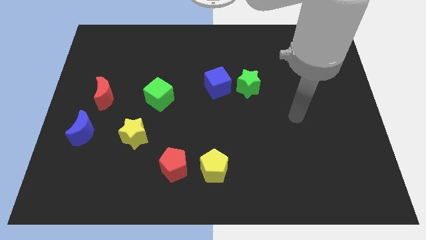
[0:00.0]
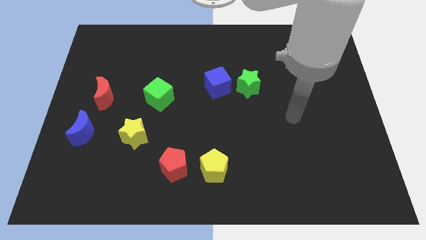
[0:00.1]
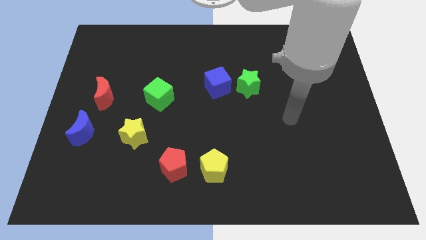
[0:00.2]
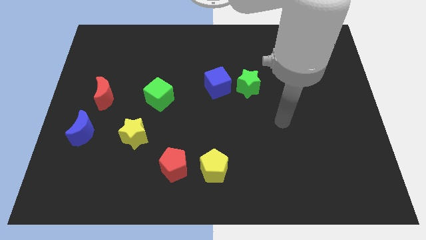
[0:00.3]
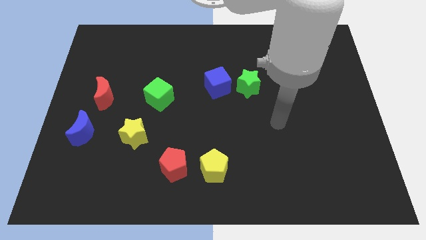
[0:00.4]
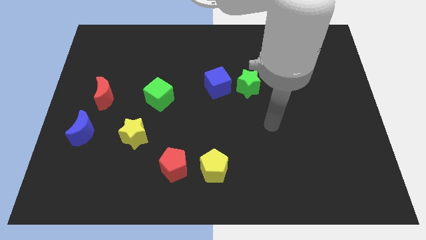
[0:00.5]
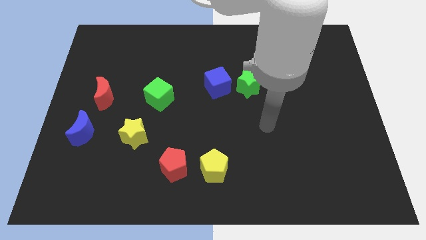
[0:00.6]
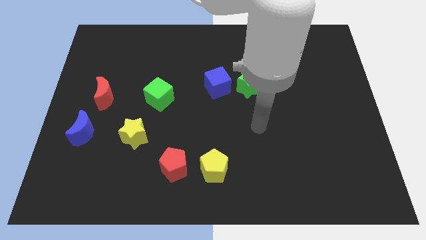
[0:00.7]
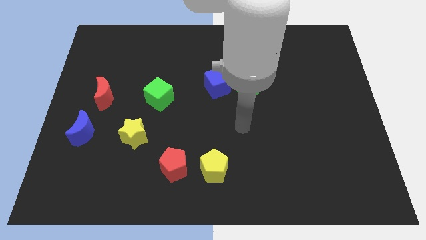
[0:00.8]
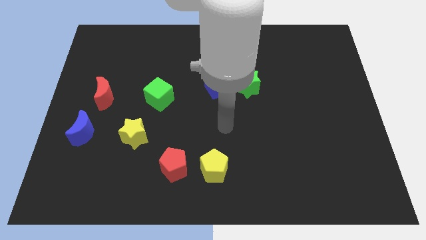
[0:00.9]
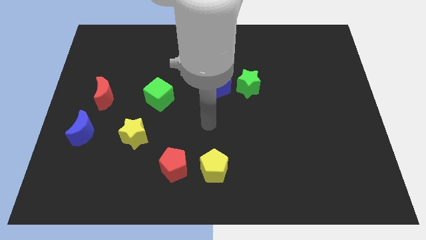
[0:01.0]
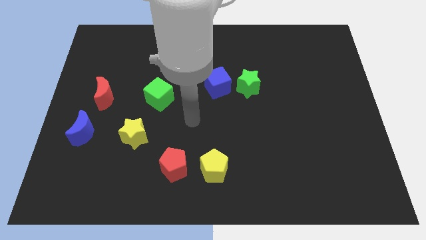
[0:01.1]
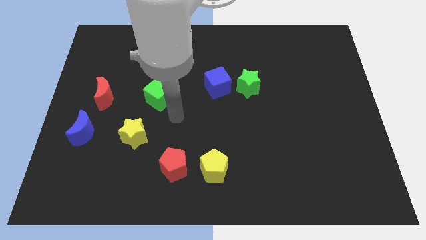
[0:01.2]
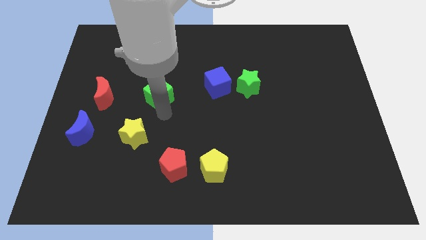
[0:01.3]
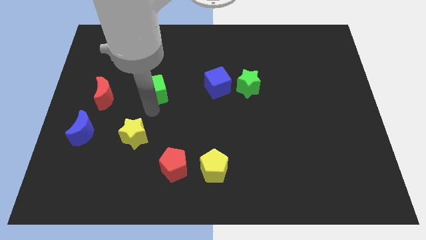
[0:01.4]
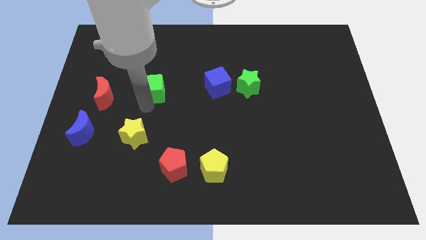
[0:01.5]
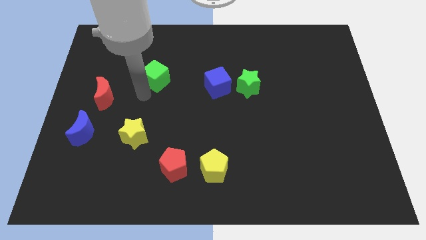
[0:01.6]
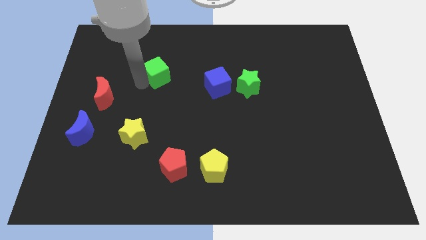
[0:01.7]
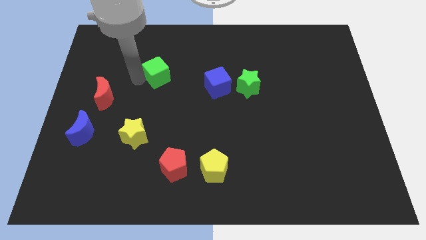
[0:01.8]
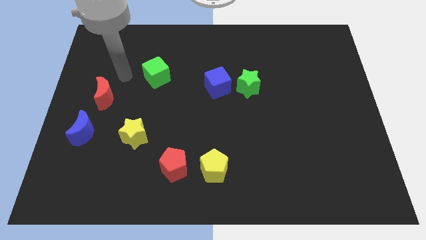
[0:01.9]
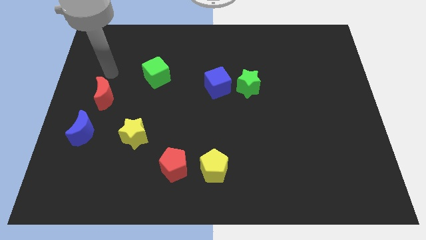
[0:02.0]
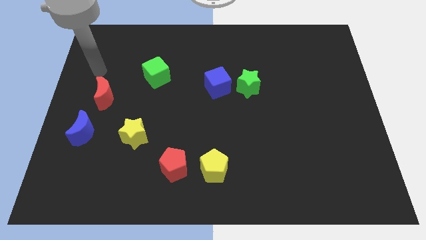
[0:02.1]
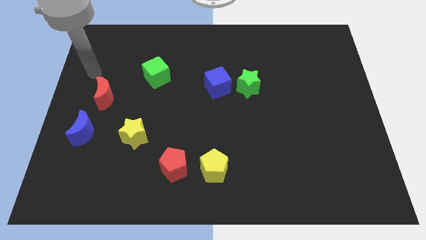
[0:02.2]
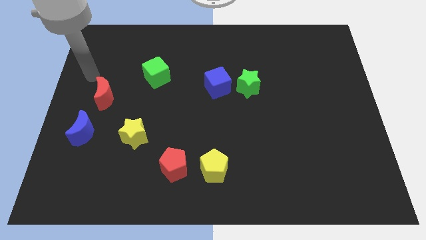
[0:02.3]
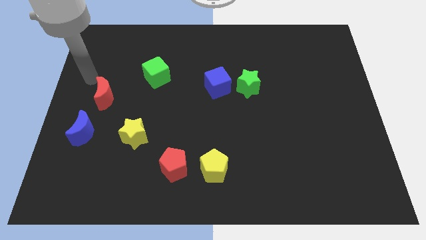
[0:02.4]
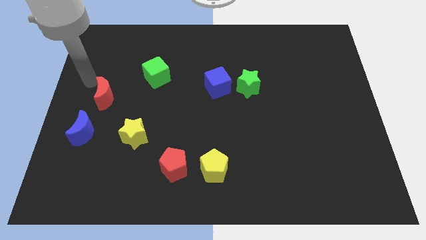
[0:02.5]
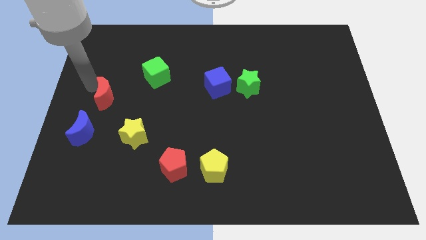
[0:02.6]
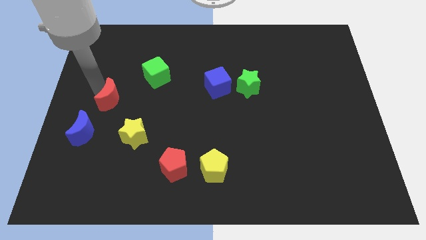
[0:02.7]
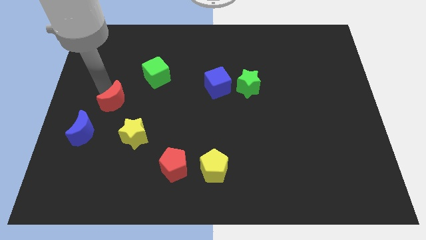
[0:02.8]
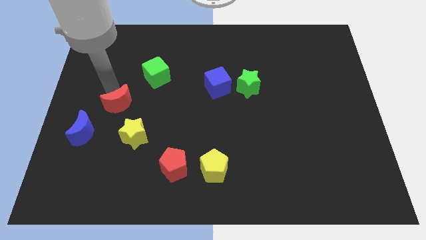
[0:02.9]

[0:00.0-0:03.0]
slightly move the green cube towards the top center of the board

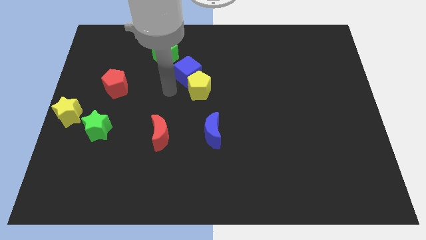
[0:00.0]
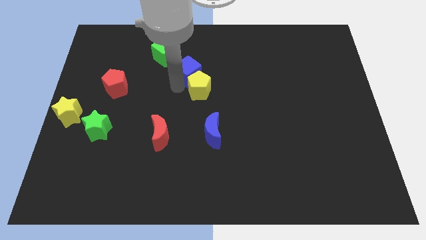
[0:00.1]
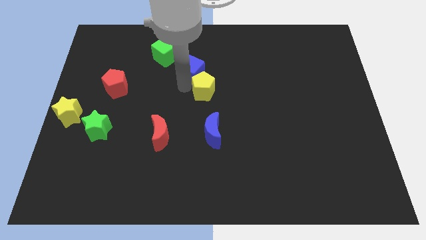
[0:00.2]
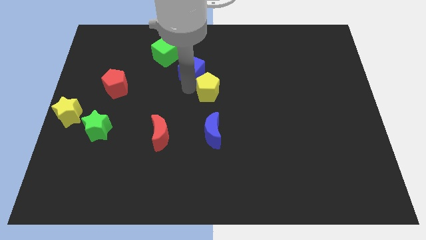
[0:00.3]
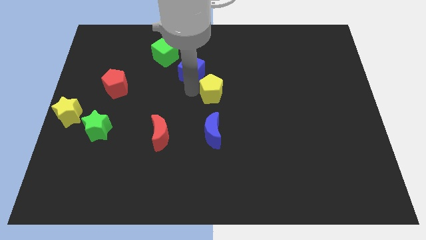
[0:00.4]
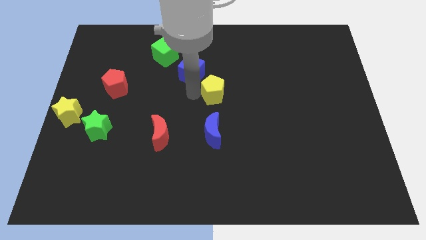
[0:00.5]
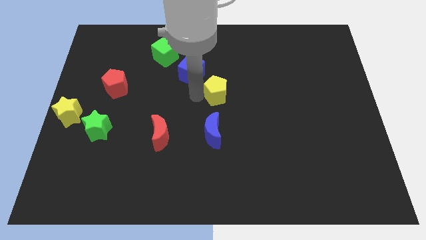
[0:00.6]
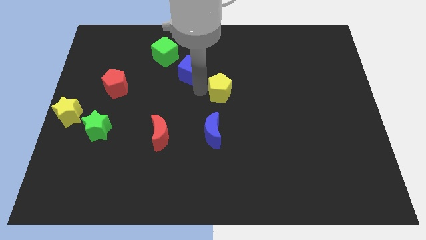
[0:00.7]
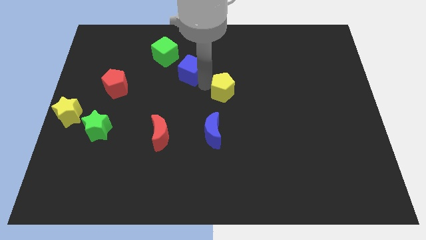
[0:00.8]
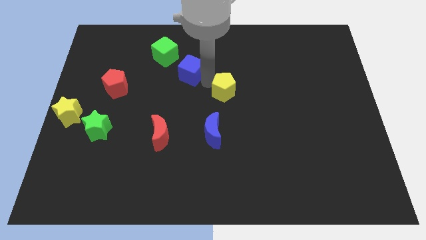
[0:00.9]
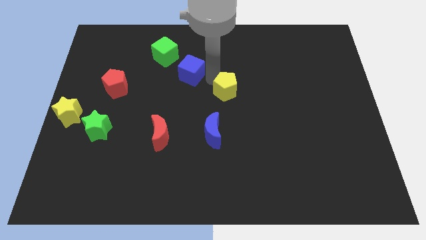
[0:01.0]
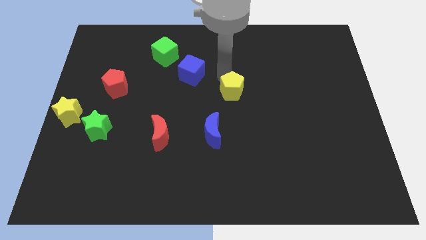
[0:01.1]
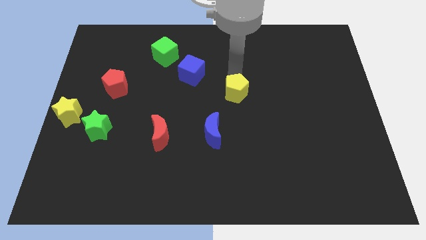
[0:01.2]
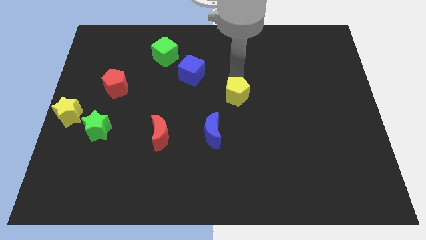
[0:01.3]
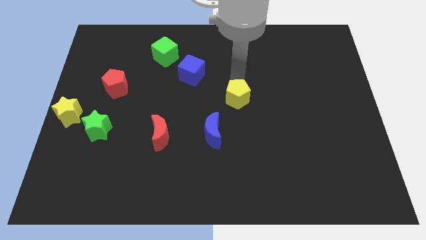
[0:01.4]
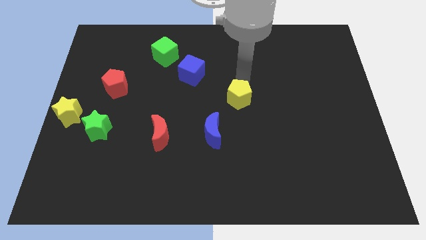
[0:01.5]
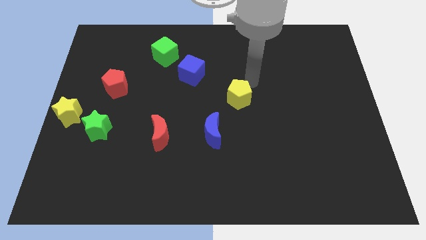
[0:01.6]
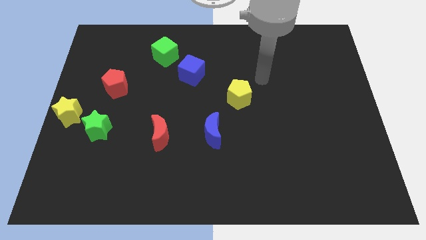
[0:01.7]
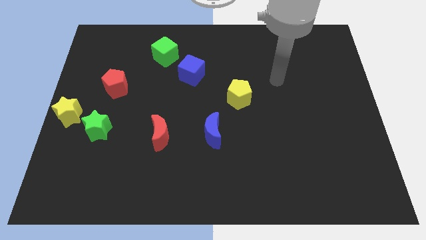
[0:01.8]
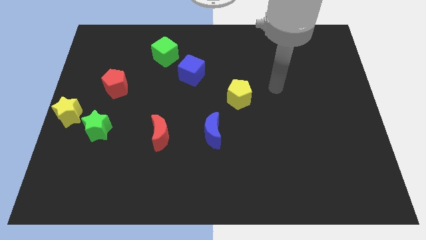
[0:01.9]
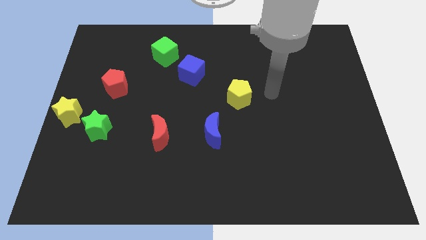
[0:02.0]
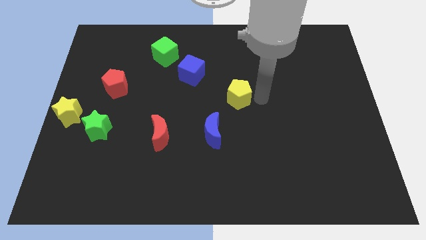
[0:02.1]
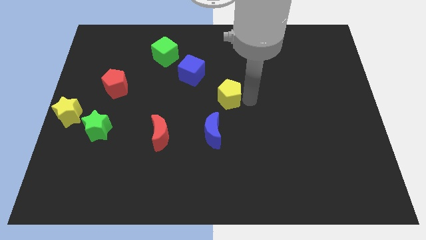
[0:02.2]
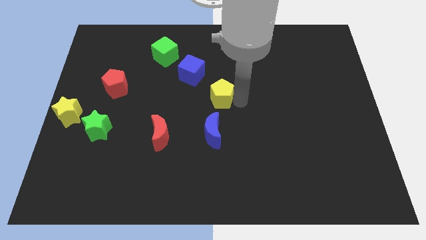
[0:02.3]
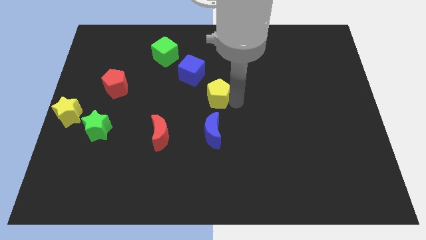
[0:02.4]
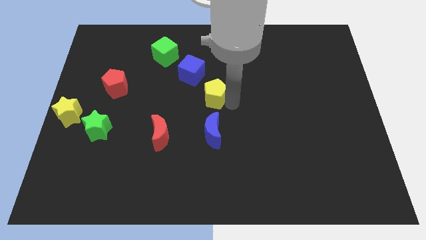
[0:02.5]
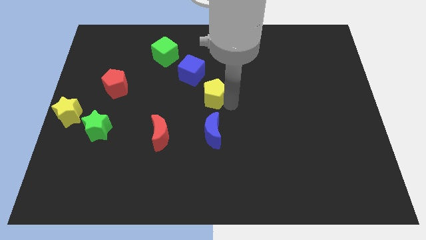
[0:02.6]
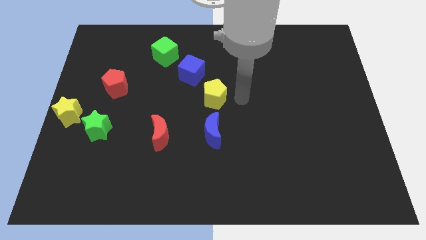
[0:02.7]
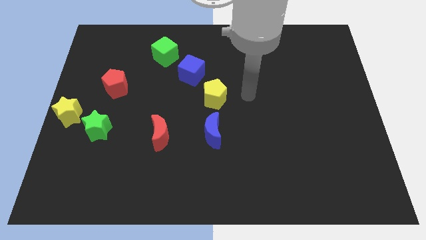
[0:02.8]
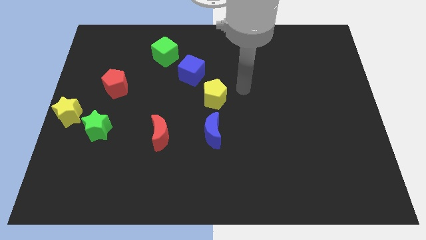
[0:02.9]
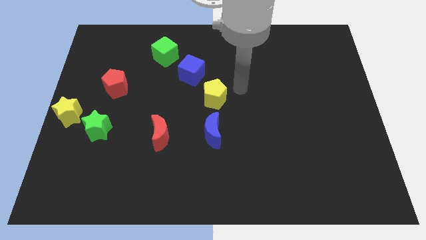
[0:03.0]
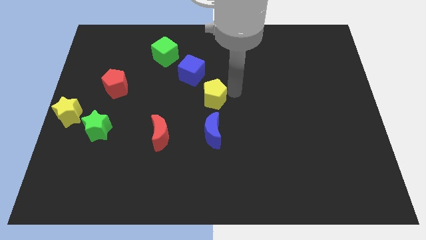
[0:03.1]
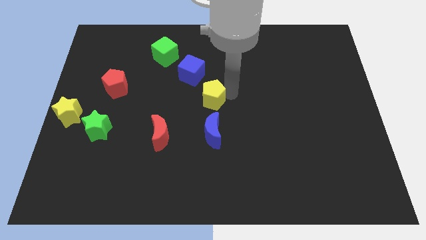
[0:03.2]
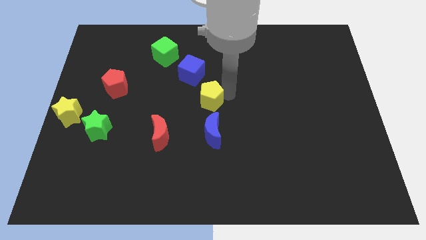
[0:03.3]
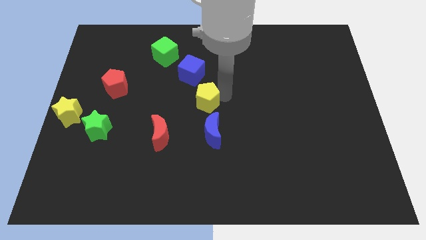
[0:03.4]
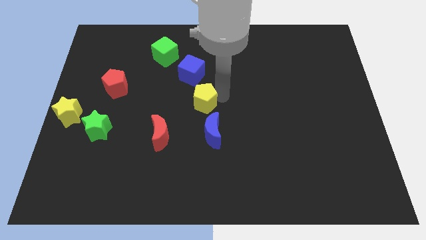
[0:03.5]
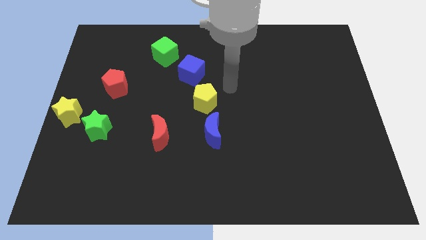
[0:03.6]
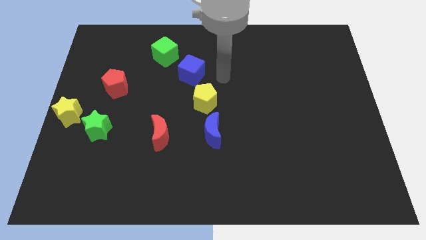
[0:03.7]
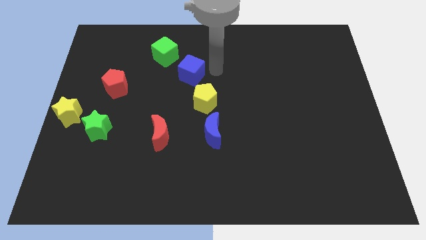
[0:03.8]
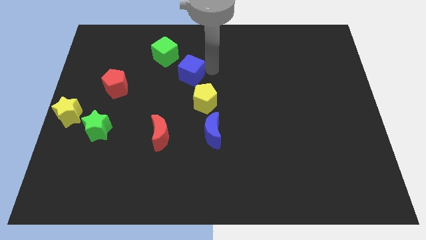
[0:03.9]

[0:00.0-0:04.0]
adjust the yellow pentagon between the blue moon and blue cube

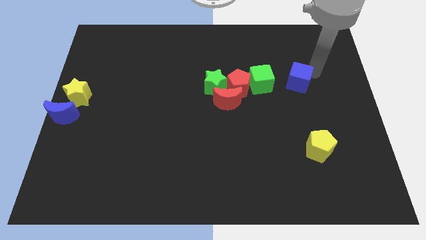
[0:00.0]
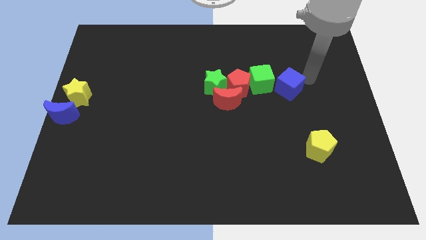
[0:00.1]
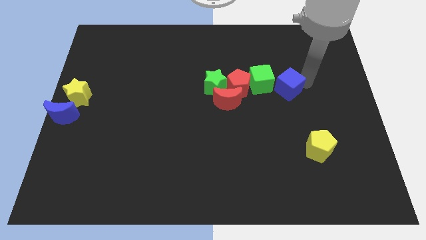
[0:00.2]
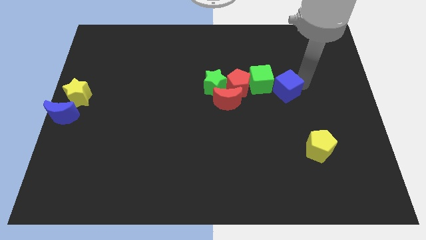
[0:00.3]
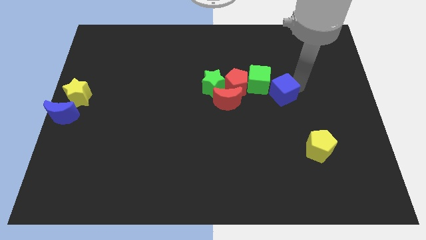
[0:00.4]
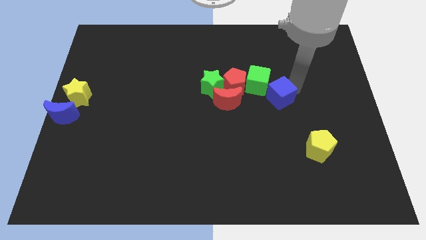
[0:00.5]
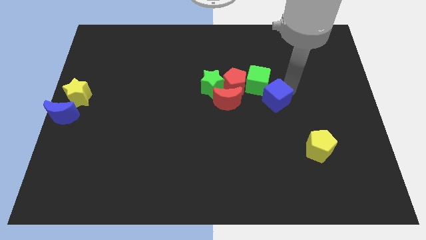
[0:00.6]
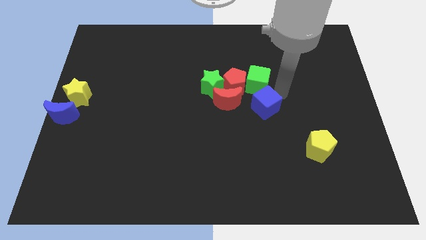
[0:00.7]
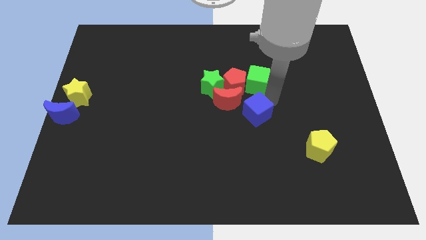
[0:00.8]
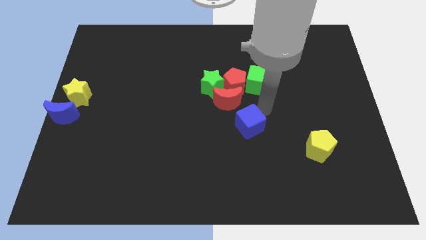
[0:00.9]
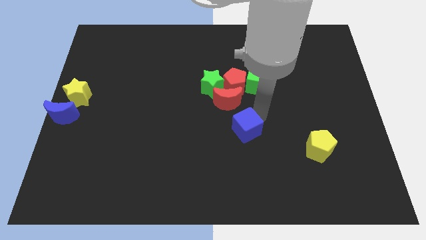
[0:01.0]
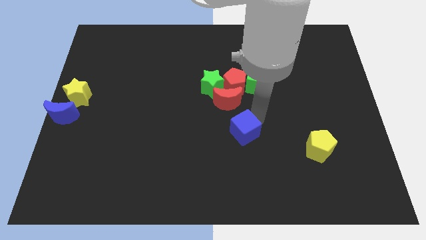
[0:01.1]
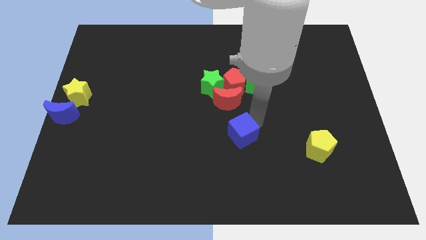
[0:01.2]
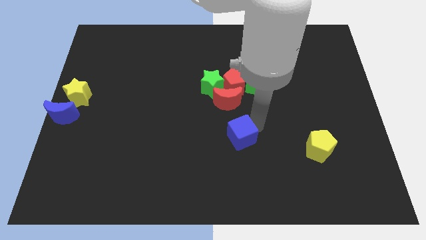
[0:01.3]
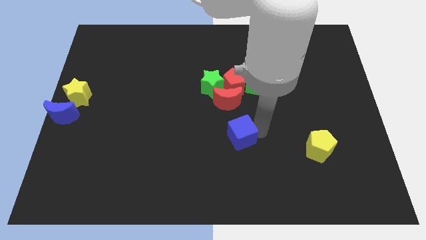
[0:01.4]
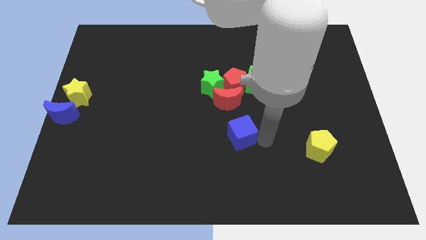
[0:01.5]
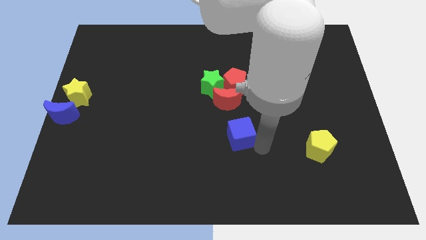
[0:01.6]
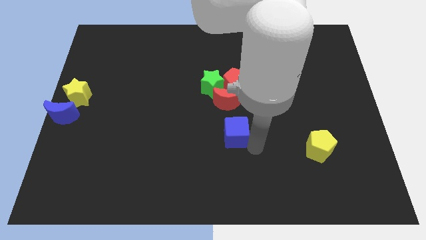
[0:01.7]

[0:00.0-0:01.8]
place the blue cube below the red moon

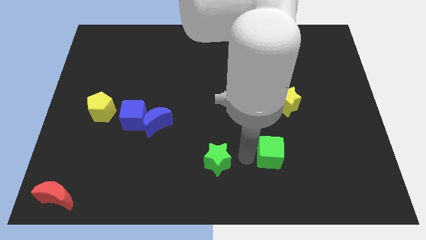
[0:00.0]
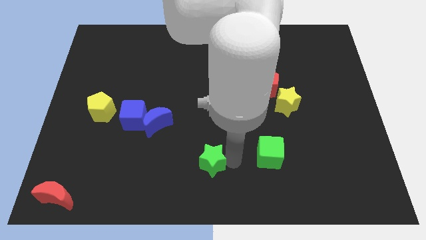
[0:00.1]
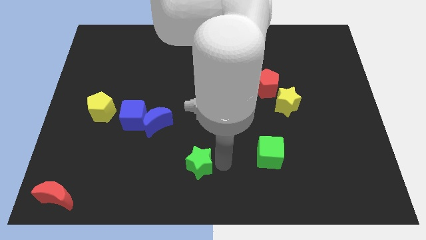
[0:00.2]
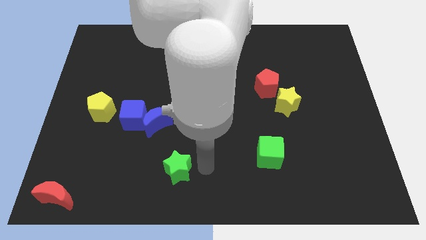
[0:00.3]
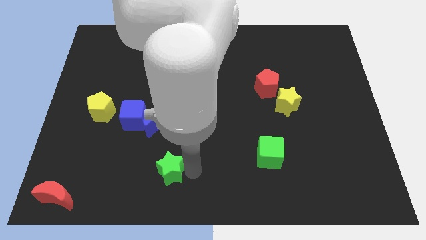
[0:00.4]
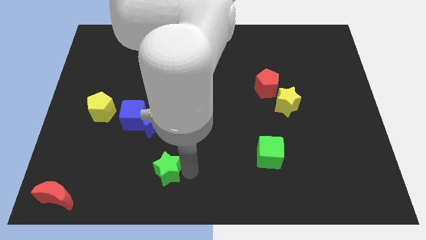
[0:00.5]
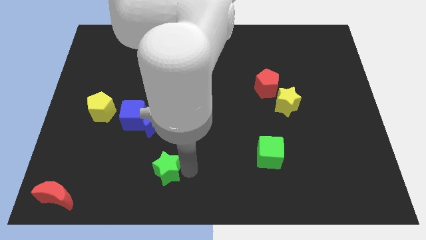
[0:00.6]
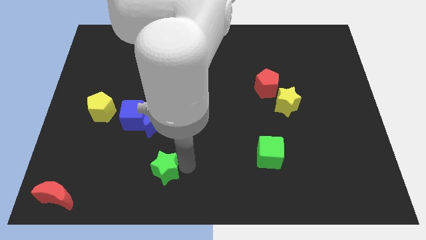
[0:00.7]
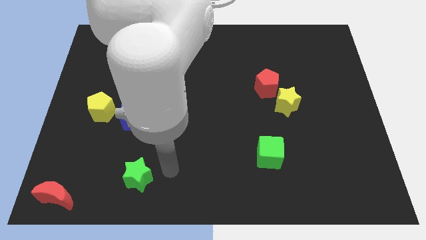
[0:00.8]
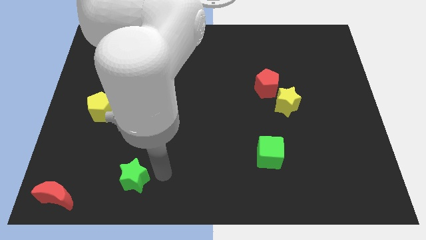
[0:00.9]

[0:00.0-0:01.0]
push the green star towards the bottom left
